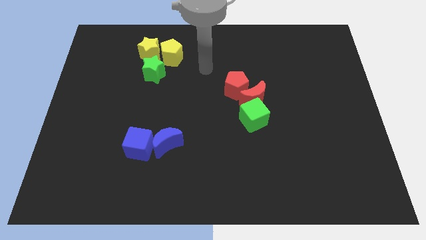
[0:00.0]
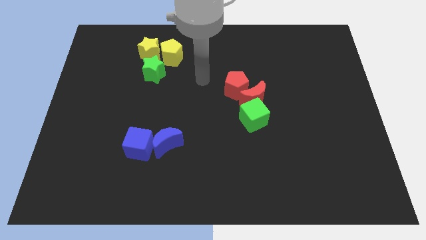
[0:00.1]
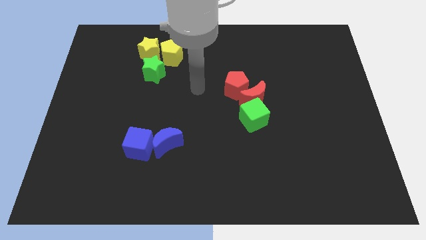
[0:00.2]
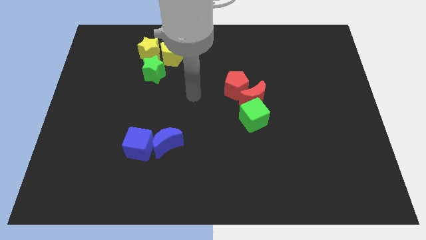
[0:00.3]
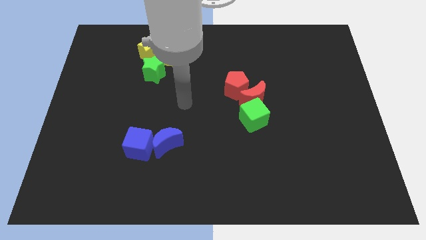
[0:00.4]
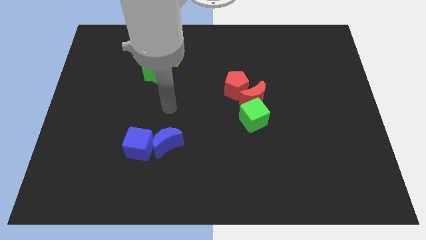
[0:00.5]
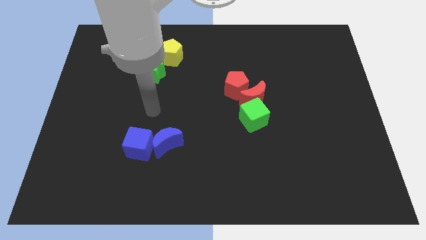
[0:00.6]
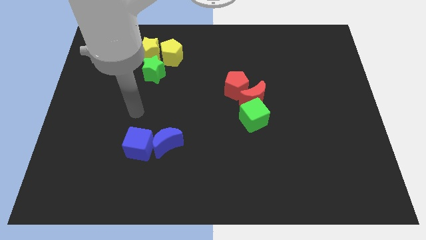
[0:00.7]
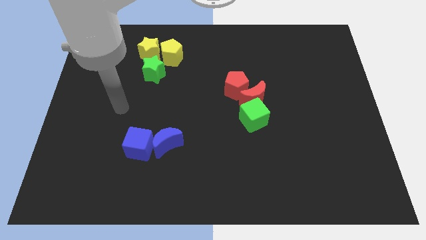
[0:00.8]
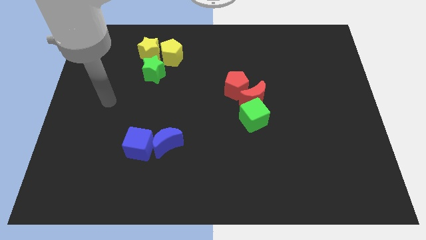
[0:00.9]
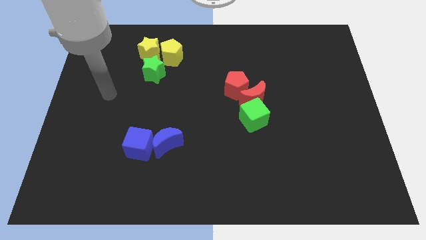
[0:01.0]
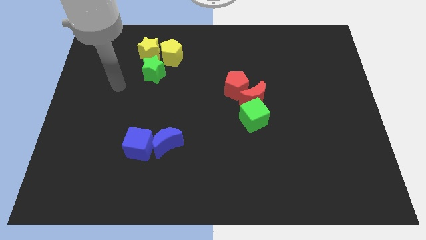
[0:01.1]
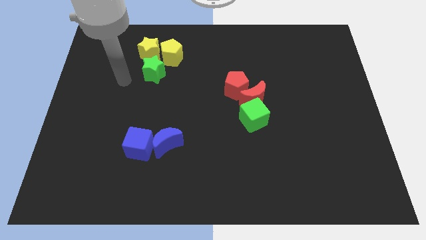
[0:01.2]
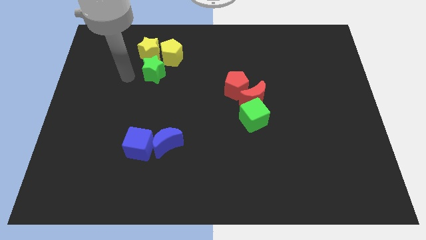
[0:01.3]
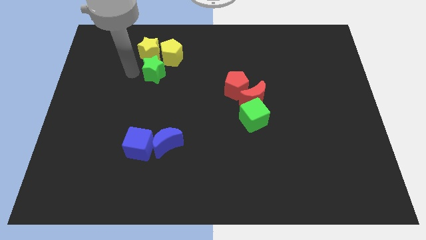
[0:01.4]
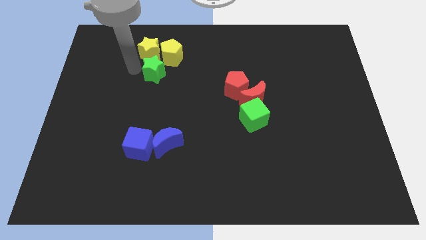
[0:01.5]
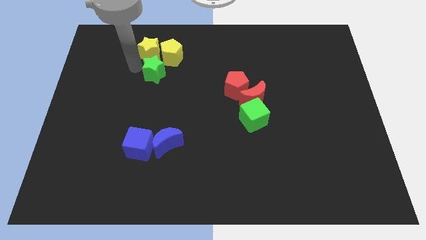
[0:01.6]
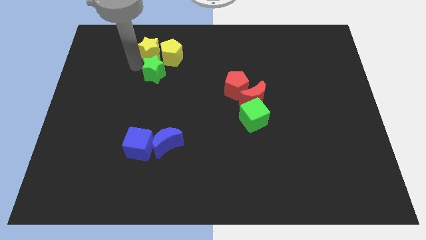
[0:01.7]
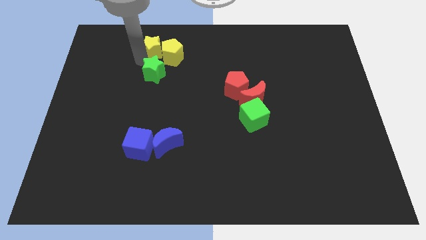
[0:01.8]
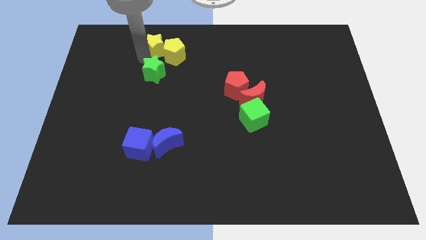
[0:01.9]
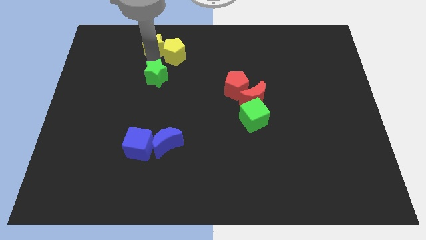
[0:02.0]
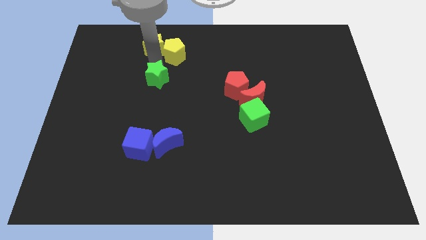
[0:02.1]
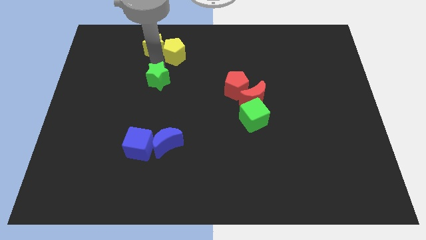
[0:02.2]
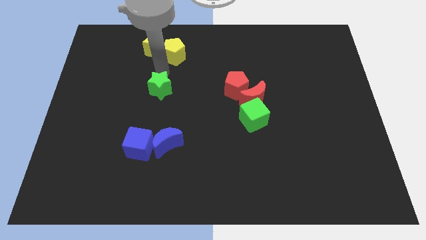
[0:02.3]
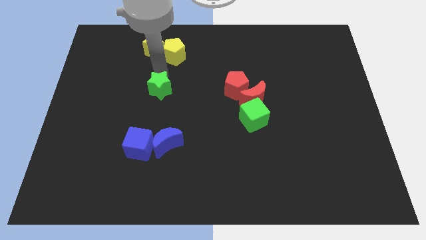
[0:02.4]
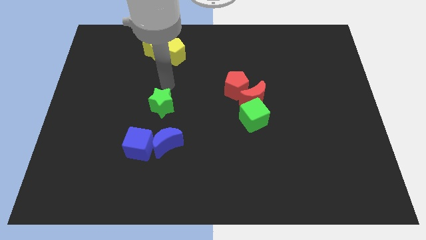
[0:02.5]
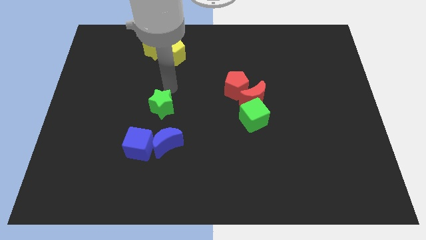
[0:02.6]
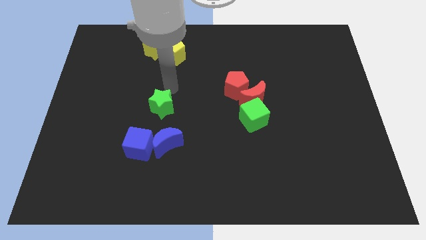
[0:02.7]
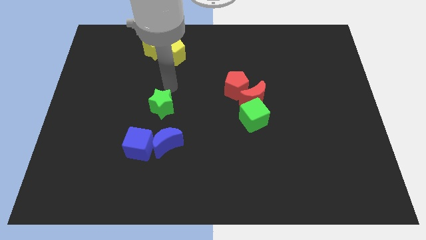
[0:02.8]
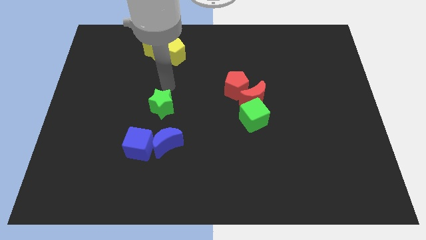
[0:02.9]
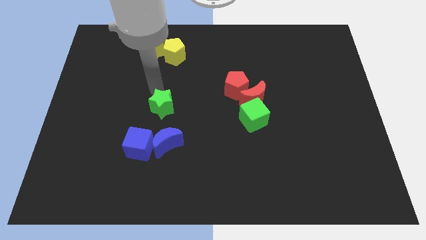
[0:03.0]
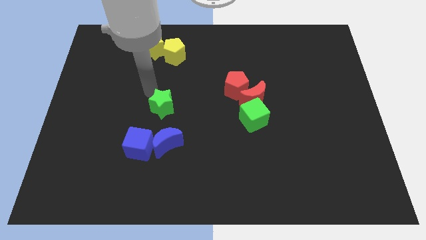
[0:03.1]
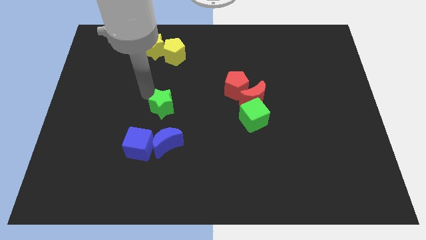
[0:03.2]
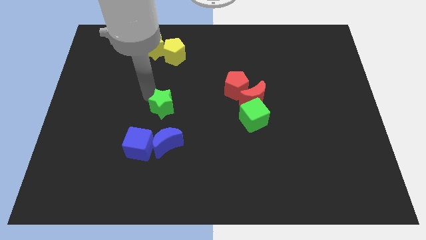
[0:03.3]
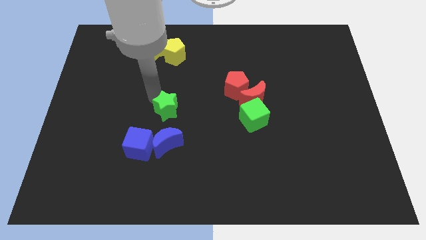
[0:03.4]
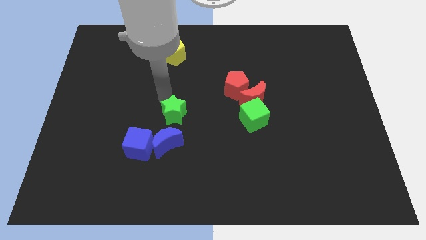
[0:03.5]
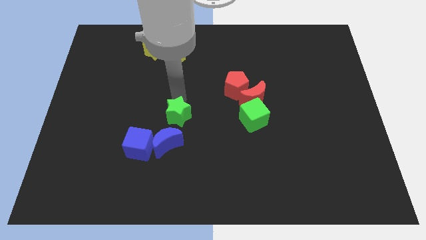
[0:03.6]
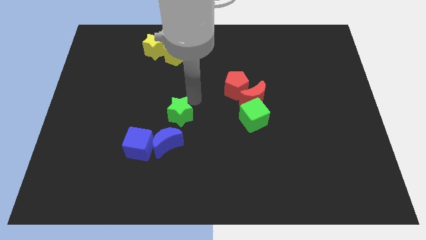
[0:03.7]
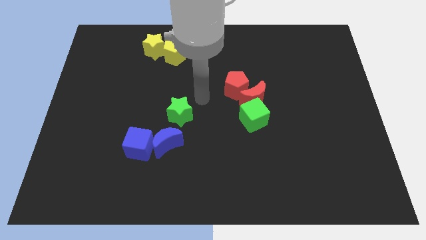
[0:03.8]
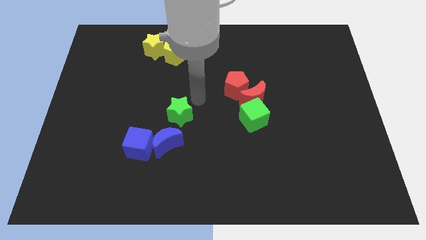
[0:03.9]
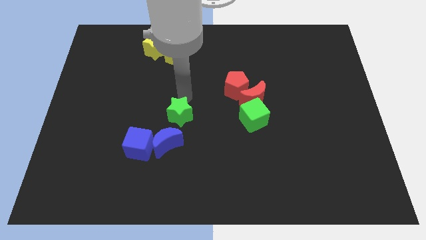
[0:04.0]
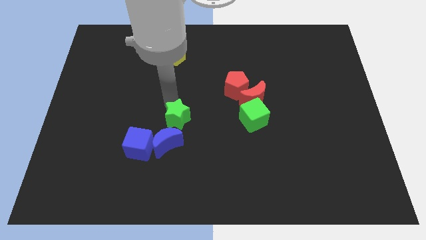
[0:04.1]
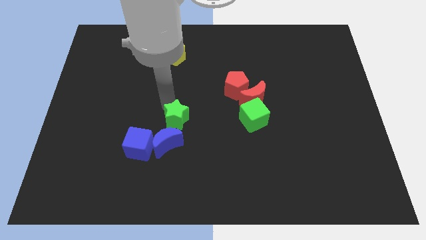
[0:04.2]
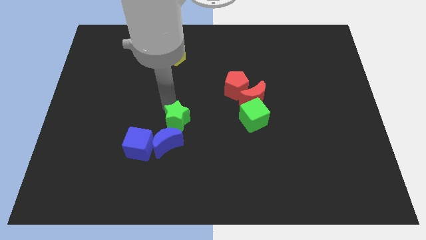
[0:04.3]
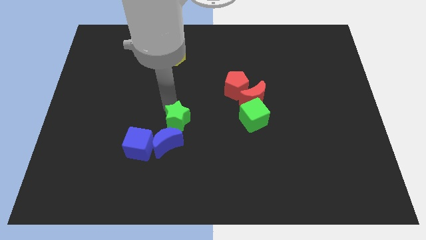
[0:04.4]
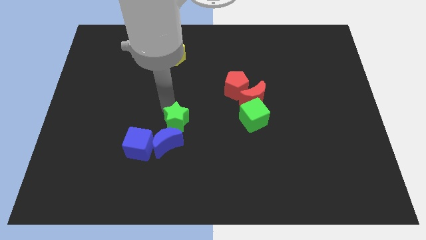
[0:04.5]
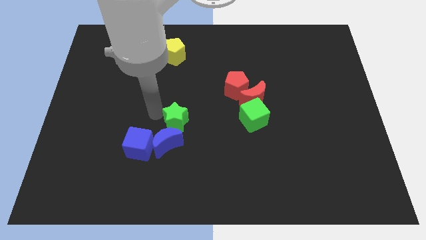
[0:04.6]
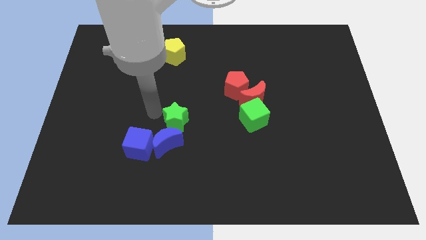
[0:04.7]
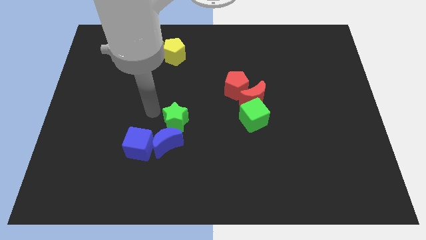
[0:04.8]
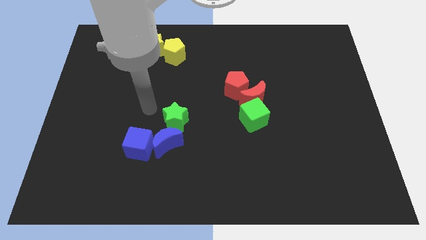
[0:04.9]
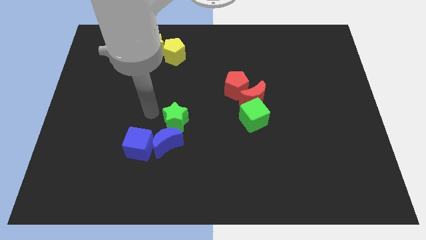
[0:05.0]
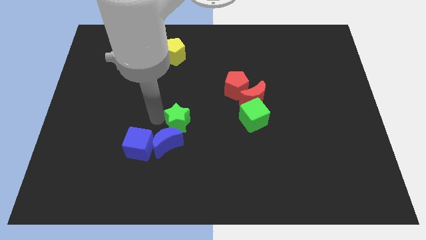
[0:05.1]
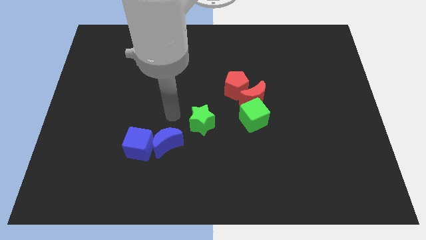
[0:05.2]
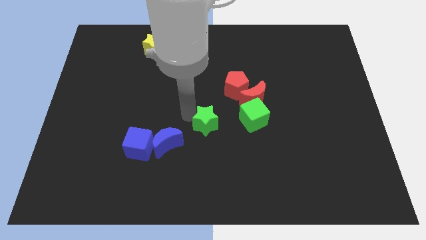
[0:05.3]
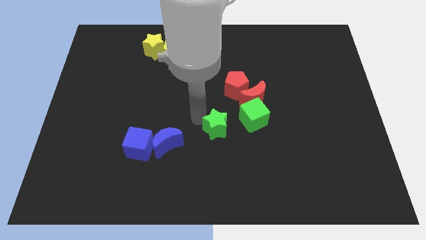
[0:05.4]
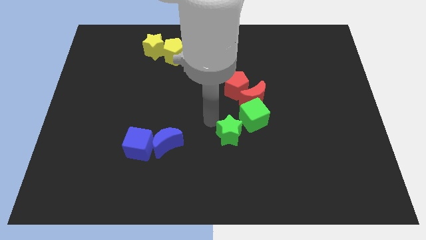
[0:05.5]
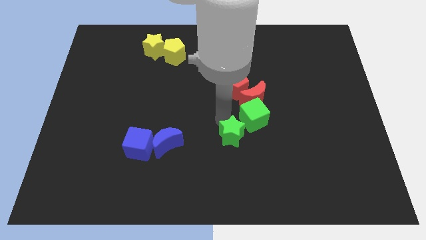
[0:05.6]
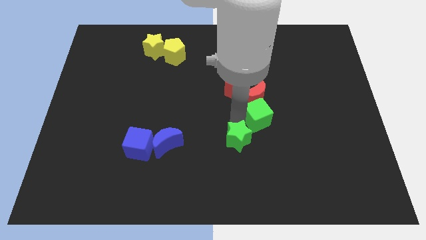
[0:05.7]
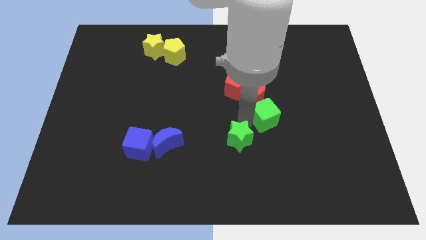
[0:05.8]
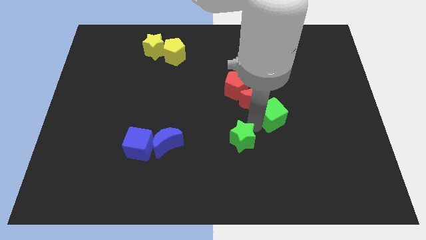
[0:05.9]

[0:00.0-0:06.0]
place the green star to the right of the blue crescent

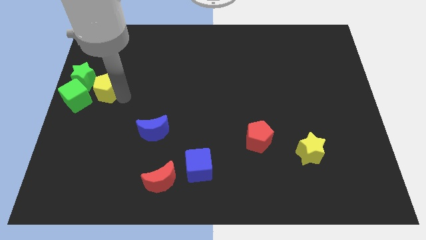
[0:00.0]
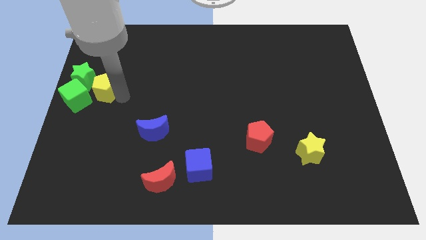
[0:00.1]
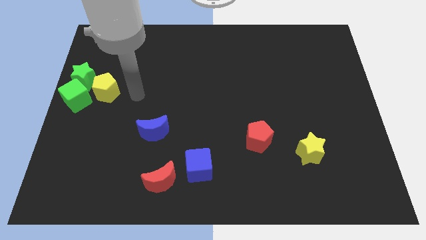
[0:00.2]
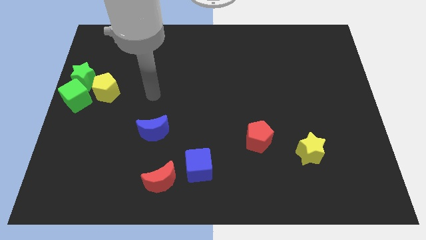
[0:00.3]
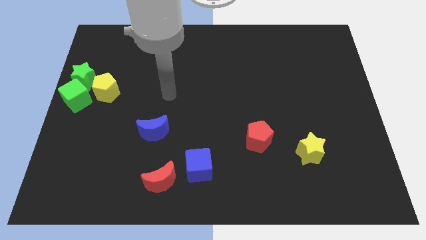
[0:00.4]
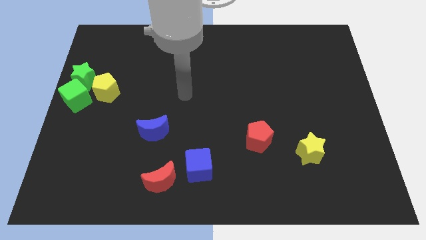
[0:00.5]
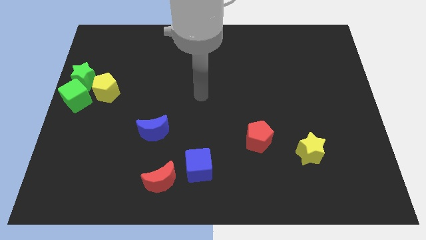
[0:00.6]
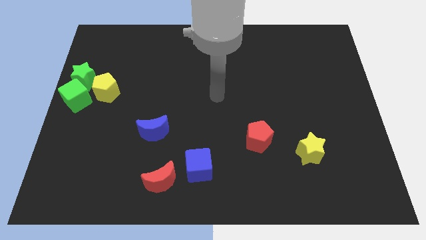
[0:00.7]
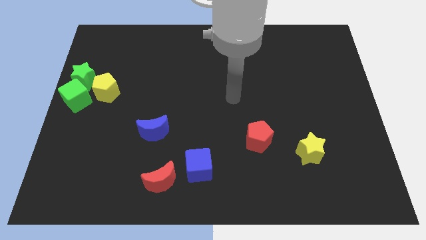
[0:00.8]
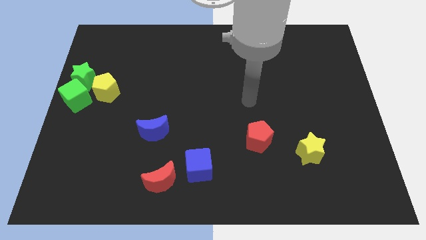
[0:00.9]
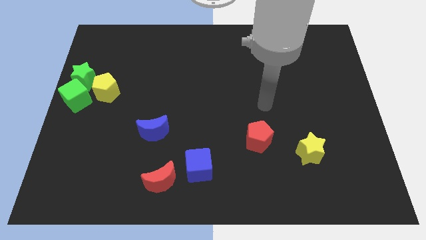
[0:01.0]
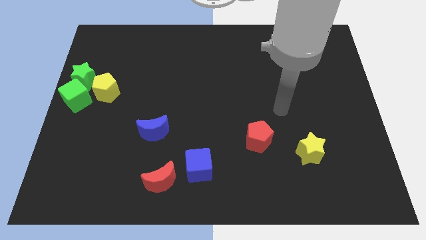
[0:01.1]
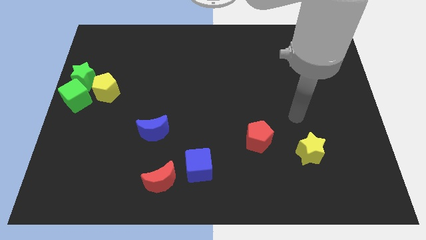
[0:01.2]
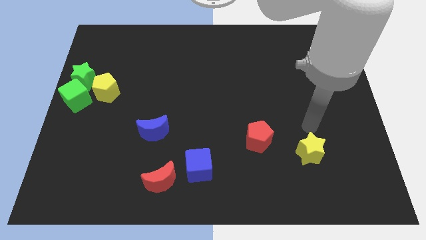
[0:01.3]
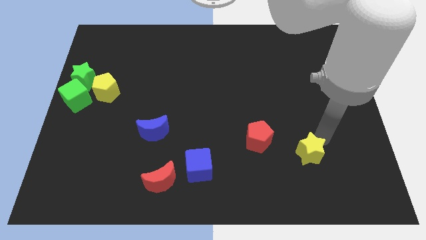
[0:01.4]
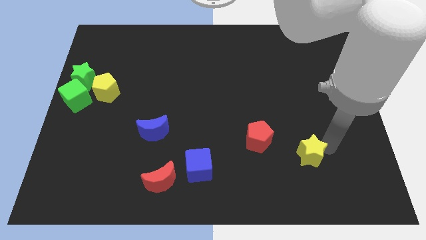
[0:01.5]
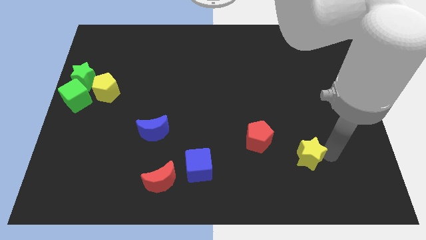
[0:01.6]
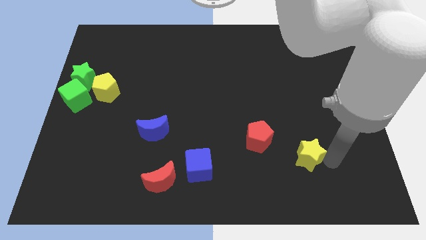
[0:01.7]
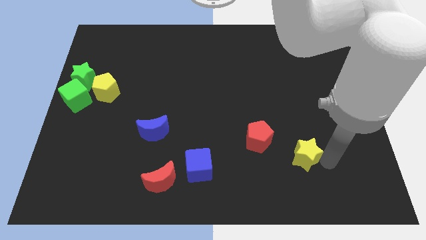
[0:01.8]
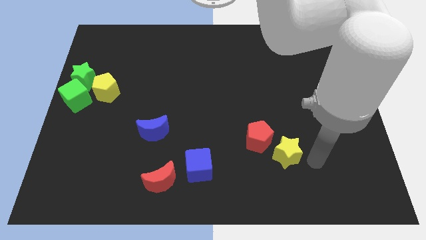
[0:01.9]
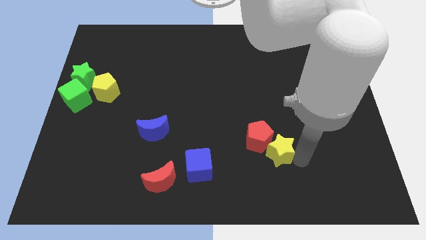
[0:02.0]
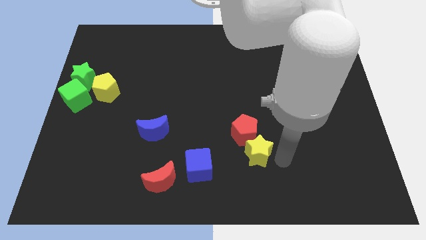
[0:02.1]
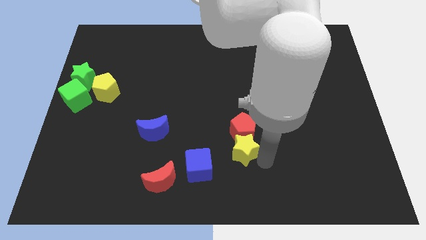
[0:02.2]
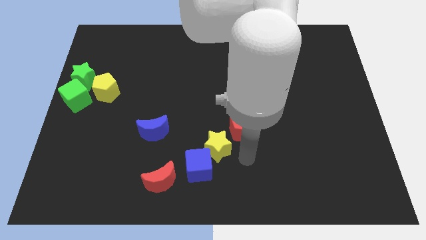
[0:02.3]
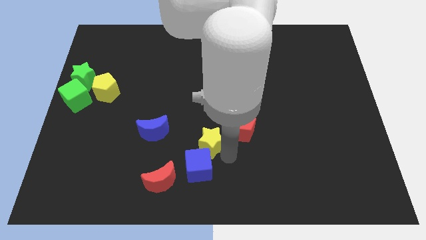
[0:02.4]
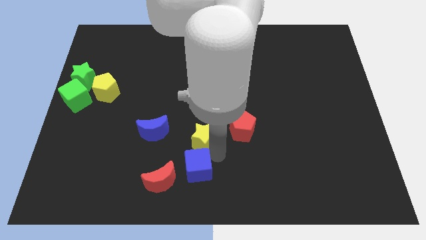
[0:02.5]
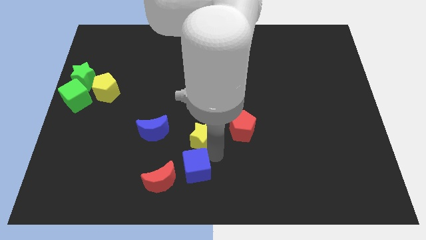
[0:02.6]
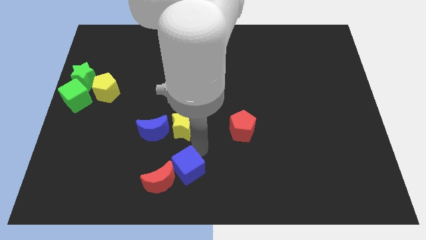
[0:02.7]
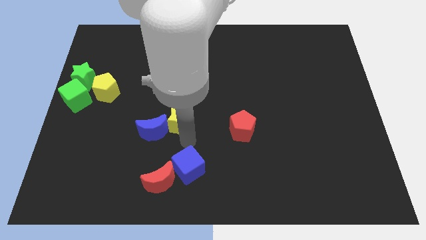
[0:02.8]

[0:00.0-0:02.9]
place yellow star to the right of blue moon
